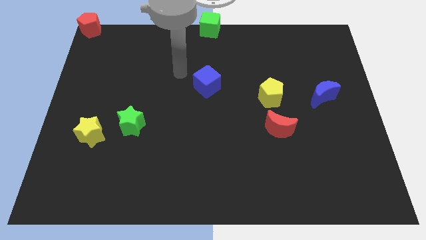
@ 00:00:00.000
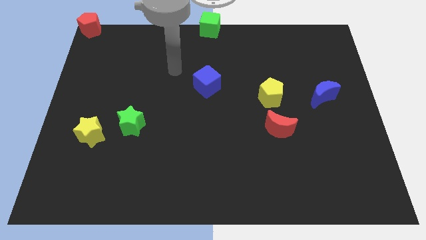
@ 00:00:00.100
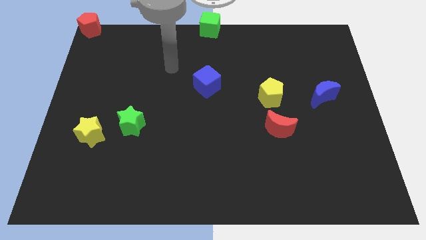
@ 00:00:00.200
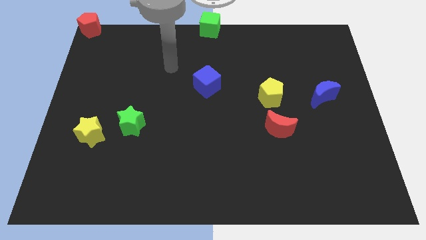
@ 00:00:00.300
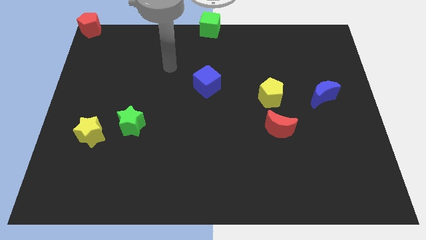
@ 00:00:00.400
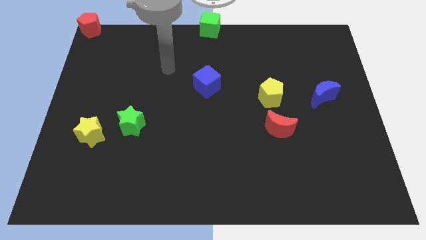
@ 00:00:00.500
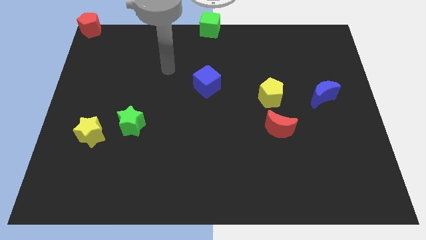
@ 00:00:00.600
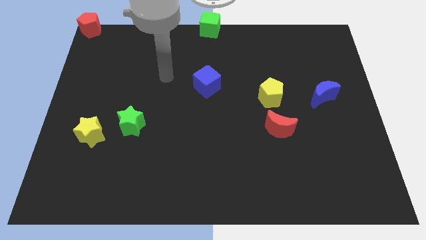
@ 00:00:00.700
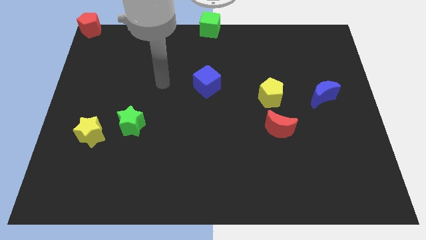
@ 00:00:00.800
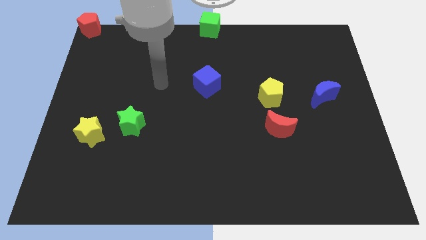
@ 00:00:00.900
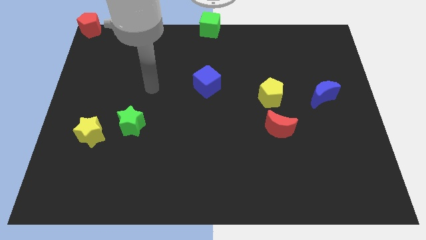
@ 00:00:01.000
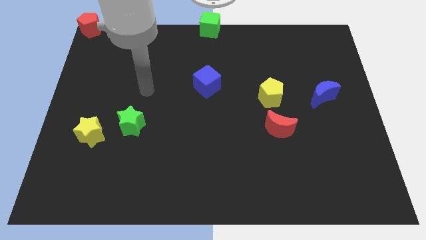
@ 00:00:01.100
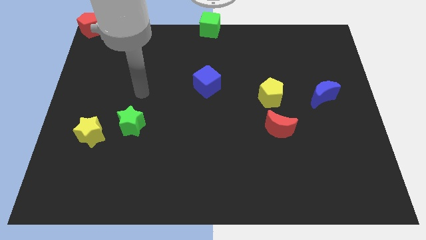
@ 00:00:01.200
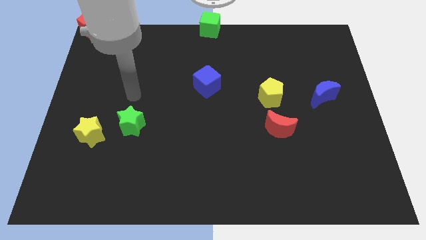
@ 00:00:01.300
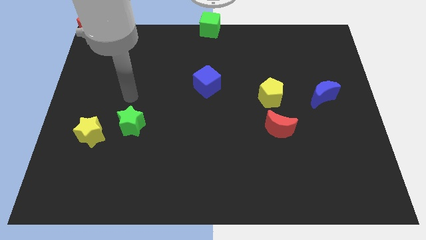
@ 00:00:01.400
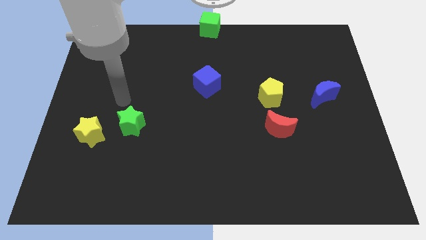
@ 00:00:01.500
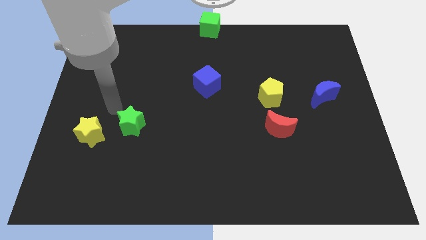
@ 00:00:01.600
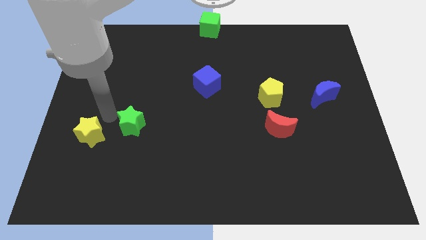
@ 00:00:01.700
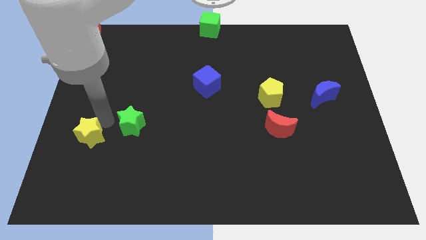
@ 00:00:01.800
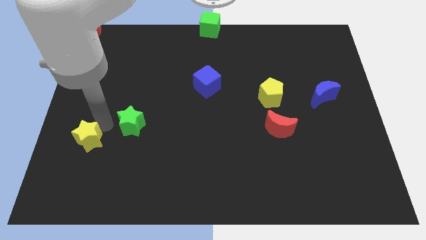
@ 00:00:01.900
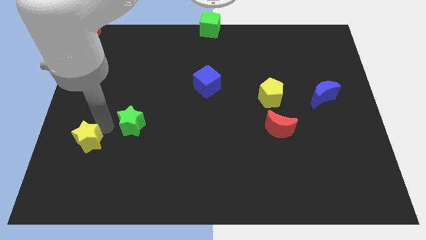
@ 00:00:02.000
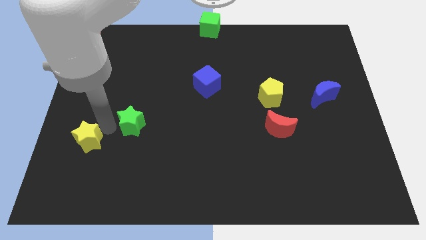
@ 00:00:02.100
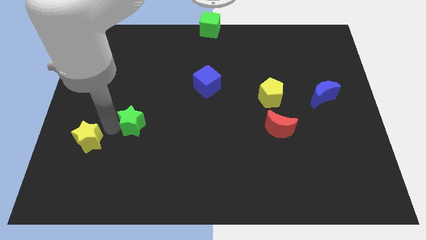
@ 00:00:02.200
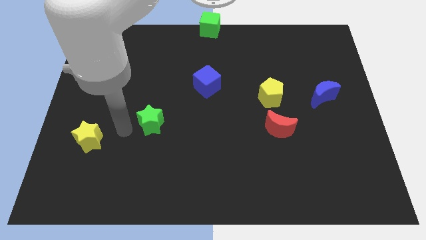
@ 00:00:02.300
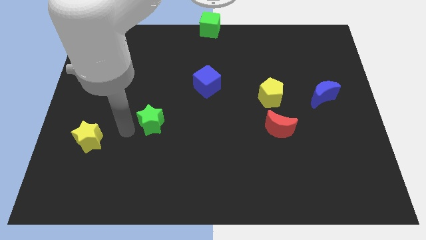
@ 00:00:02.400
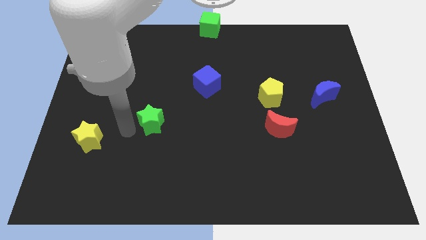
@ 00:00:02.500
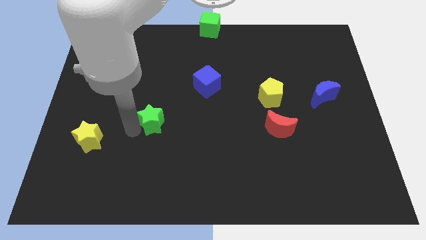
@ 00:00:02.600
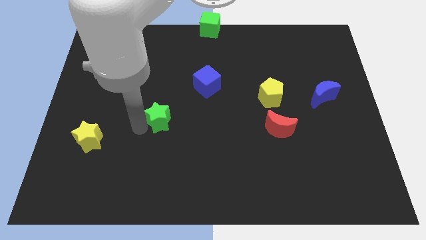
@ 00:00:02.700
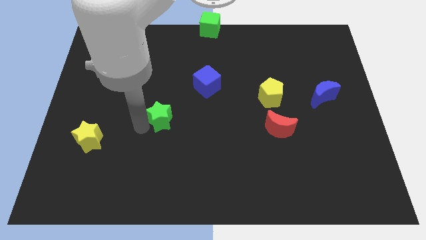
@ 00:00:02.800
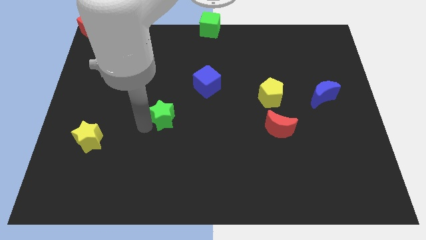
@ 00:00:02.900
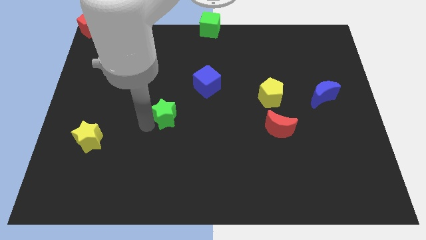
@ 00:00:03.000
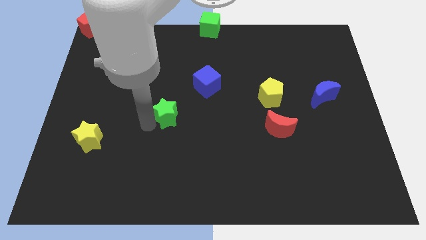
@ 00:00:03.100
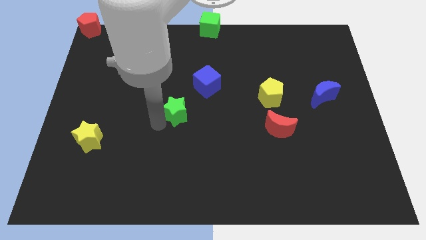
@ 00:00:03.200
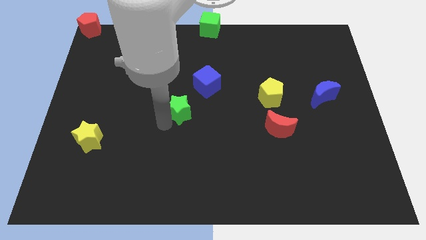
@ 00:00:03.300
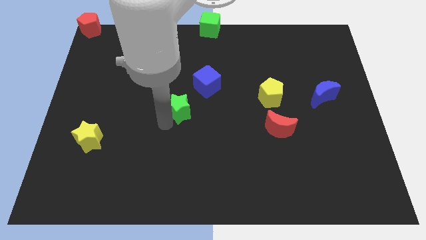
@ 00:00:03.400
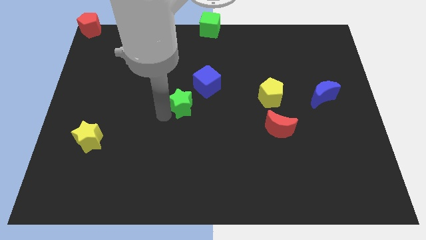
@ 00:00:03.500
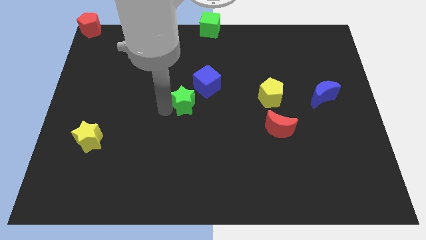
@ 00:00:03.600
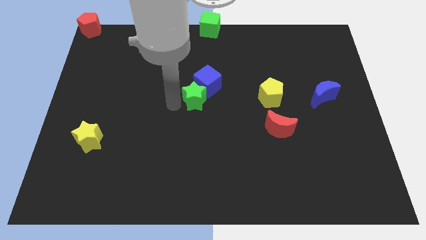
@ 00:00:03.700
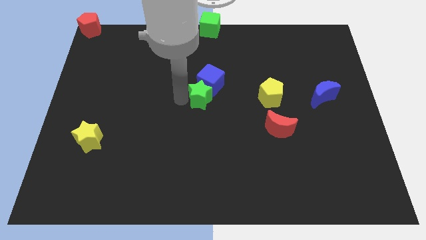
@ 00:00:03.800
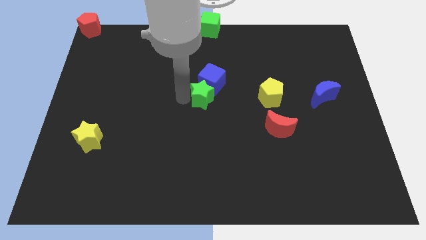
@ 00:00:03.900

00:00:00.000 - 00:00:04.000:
place green star near to the blue cube

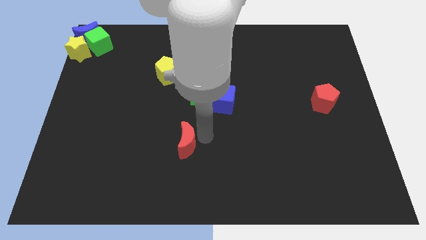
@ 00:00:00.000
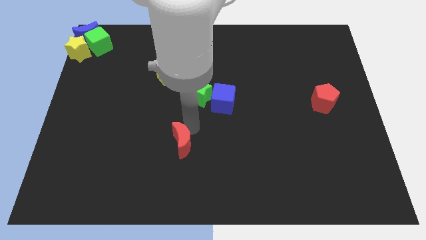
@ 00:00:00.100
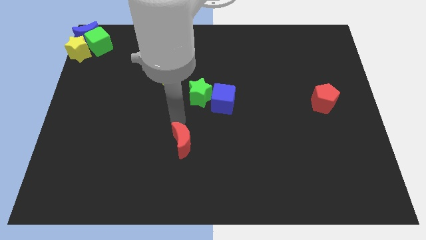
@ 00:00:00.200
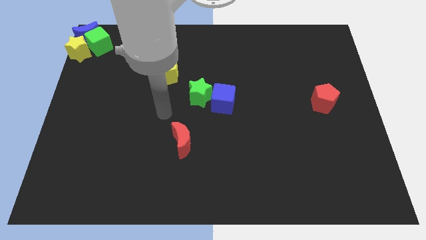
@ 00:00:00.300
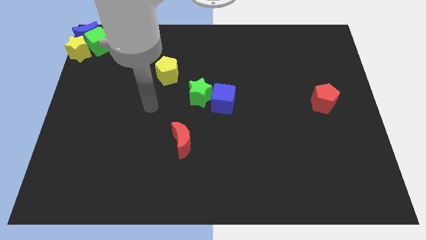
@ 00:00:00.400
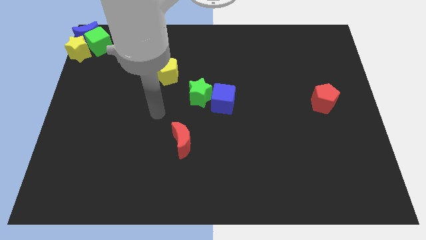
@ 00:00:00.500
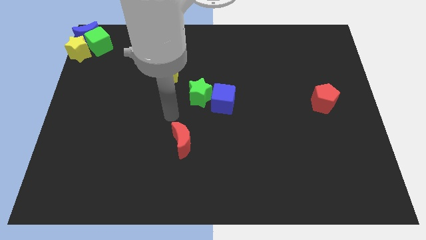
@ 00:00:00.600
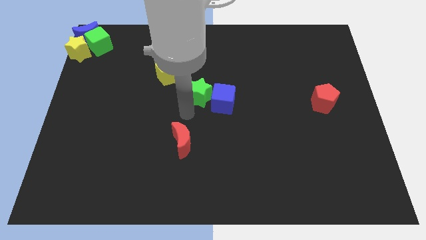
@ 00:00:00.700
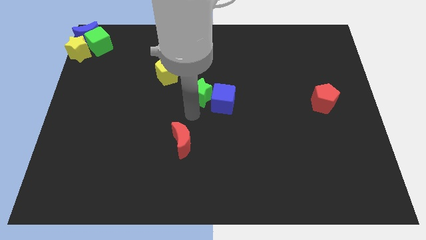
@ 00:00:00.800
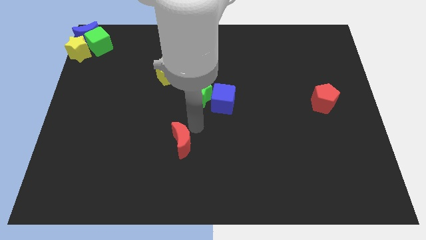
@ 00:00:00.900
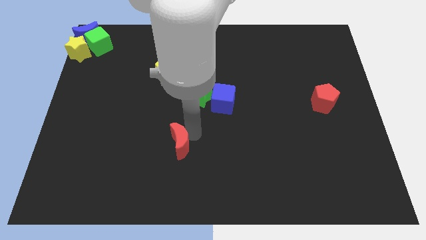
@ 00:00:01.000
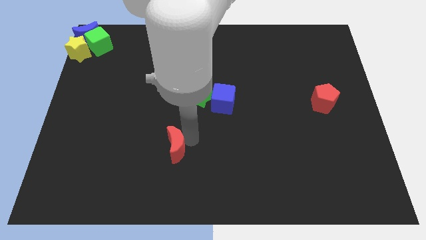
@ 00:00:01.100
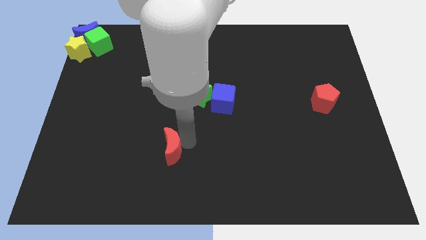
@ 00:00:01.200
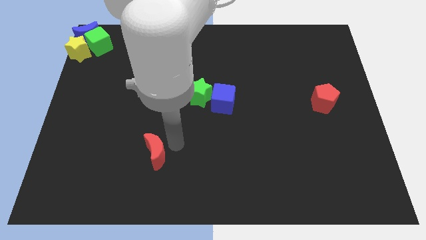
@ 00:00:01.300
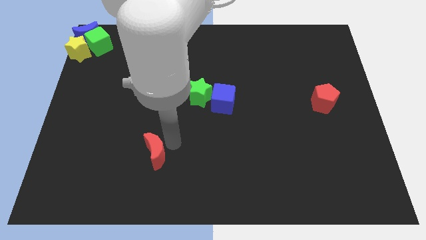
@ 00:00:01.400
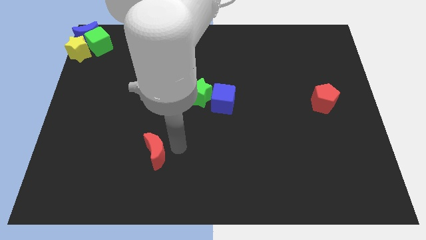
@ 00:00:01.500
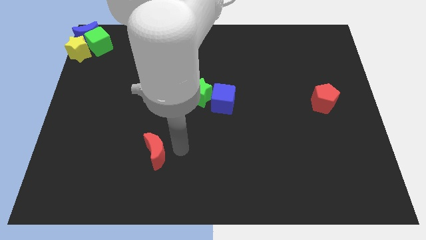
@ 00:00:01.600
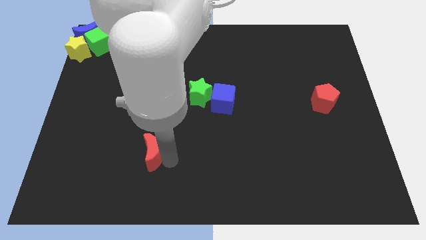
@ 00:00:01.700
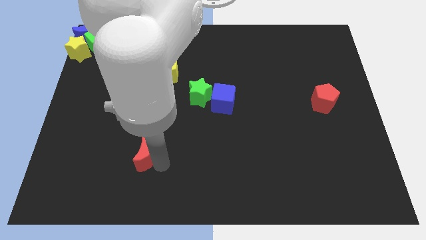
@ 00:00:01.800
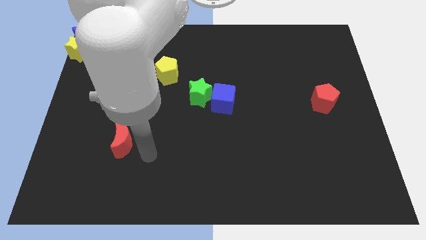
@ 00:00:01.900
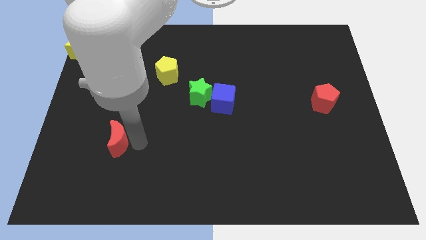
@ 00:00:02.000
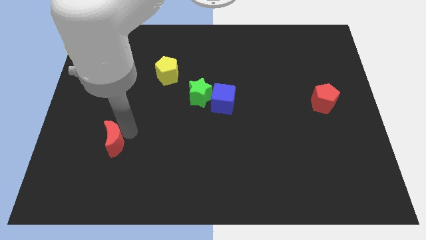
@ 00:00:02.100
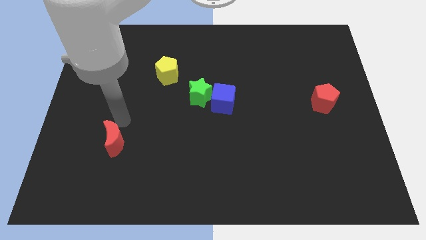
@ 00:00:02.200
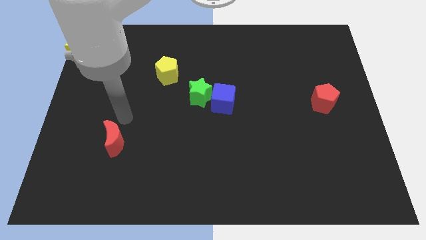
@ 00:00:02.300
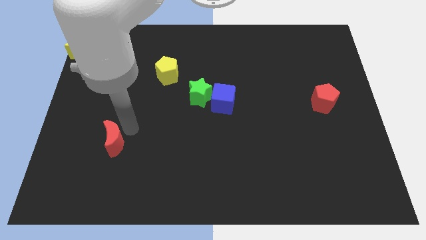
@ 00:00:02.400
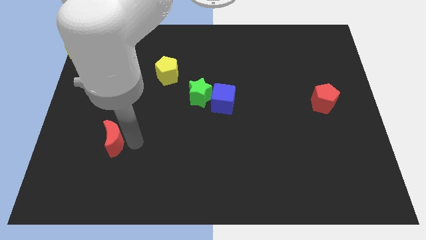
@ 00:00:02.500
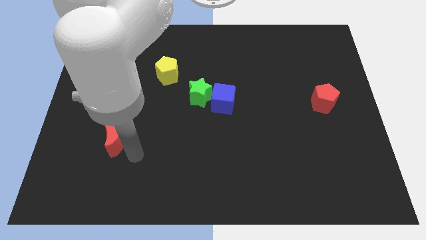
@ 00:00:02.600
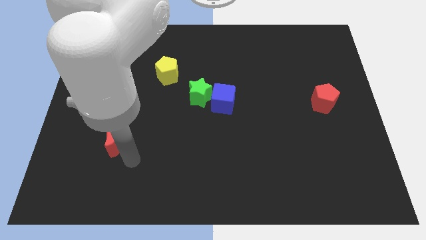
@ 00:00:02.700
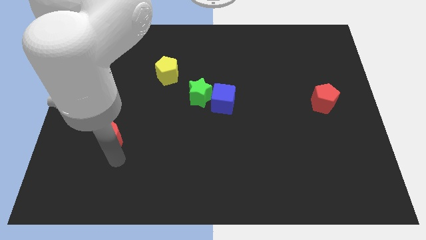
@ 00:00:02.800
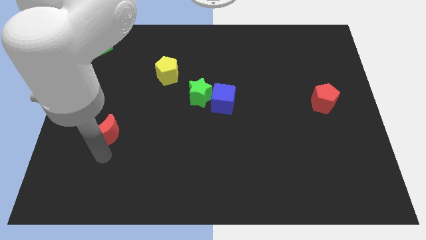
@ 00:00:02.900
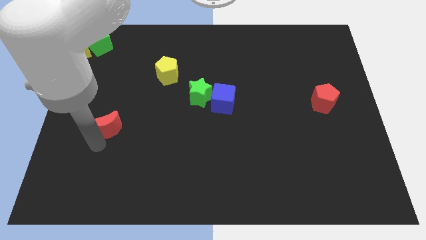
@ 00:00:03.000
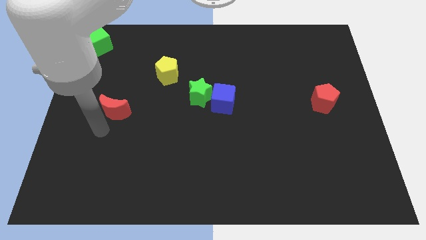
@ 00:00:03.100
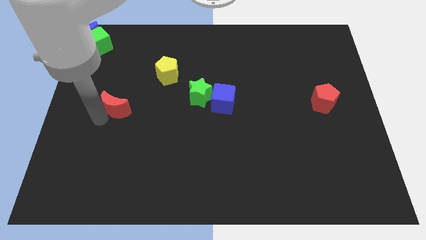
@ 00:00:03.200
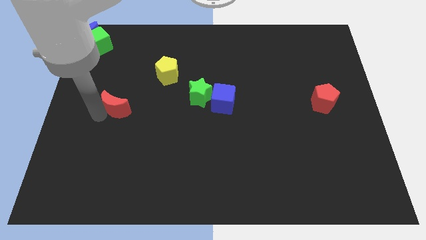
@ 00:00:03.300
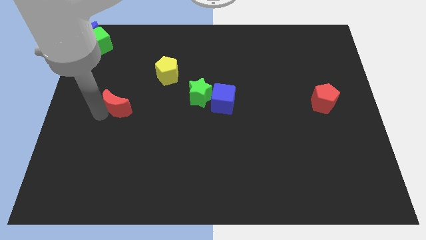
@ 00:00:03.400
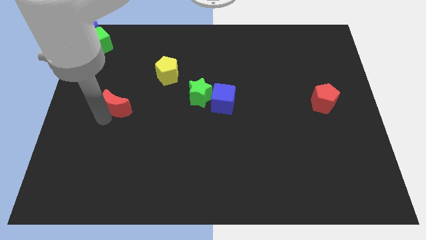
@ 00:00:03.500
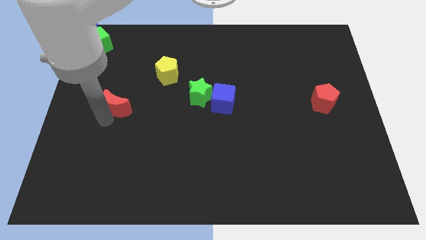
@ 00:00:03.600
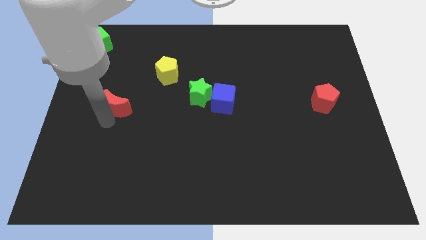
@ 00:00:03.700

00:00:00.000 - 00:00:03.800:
push the red crescent diagonal to the bottom of the green cube

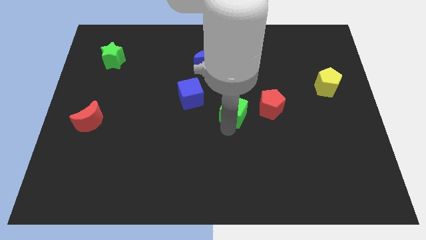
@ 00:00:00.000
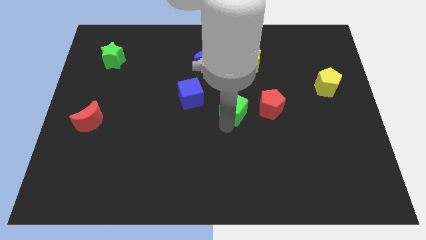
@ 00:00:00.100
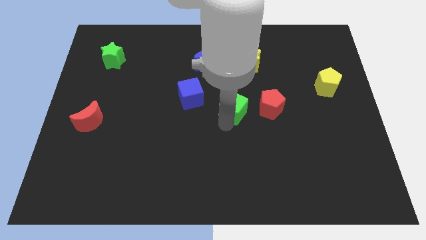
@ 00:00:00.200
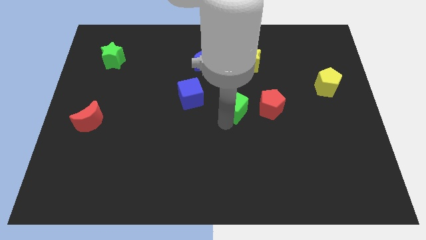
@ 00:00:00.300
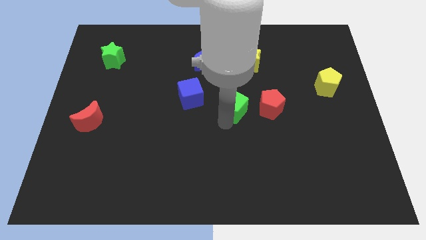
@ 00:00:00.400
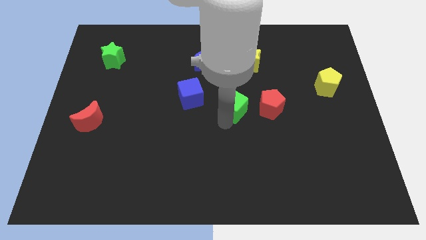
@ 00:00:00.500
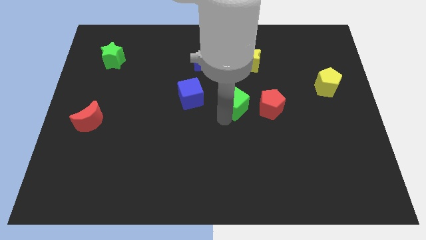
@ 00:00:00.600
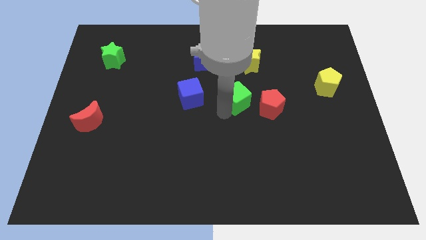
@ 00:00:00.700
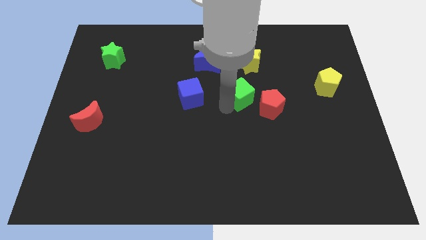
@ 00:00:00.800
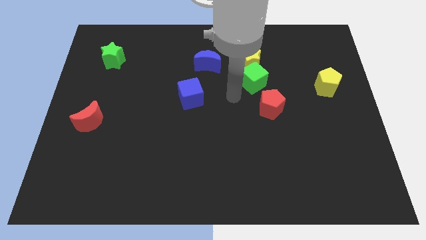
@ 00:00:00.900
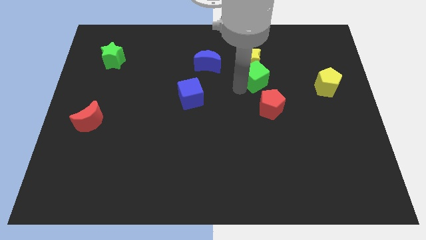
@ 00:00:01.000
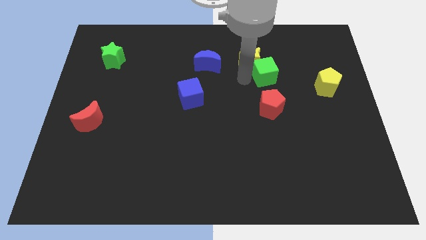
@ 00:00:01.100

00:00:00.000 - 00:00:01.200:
move green cube bellow the yellow star
